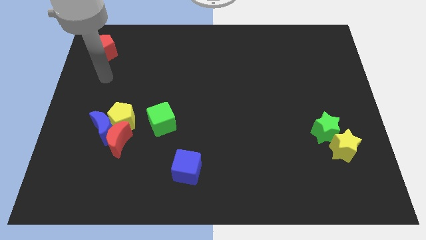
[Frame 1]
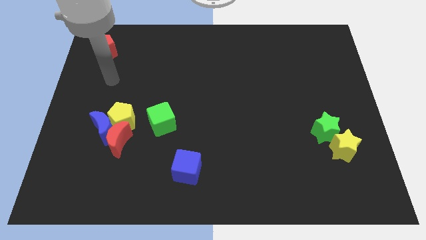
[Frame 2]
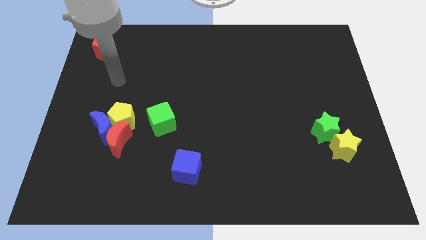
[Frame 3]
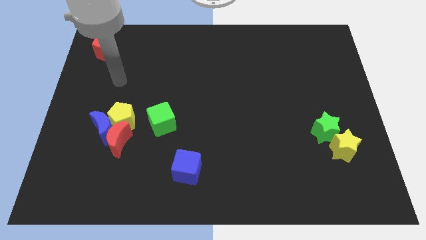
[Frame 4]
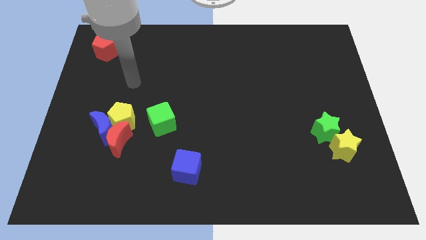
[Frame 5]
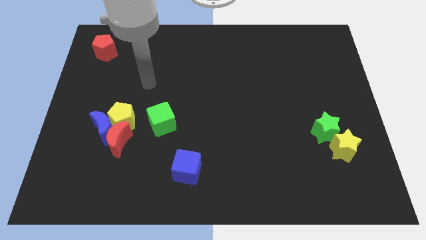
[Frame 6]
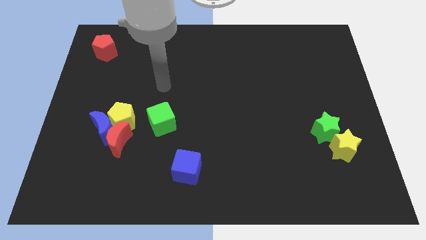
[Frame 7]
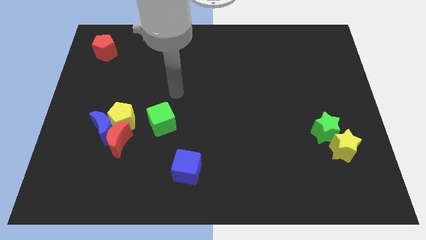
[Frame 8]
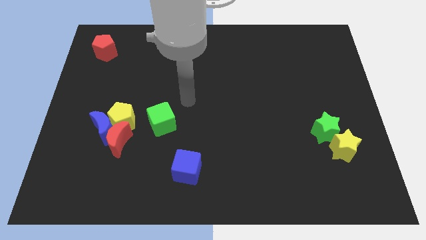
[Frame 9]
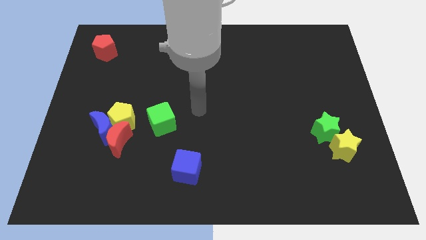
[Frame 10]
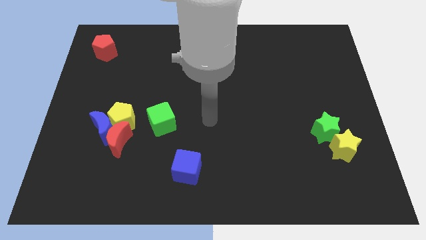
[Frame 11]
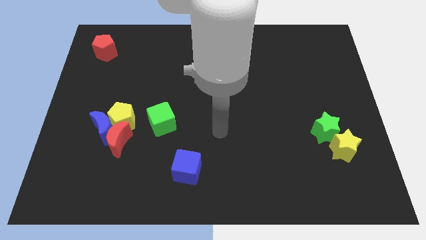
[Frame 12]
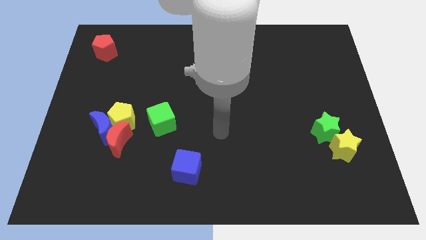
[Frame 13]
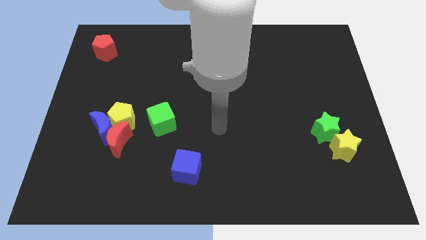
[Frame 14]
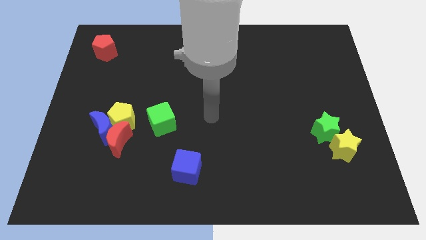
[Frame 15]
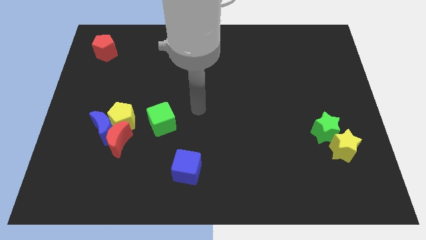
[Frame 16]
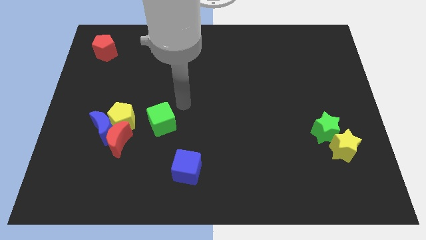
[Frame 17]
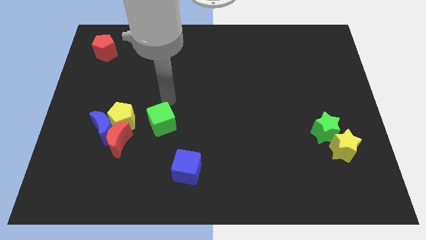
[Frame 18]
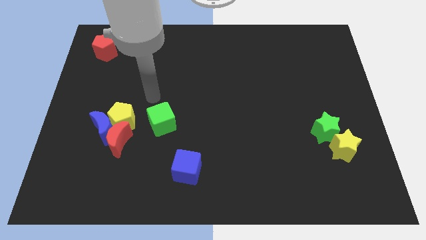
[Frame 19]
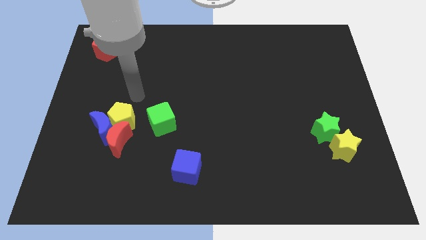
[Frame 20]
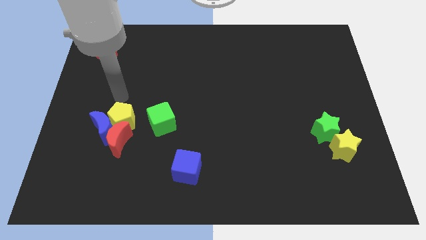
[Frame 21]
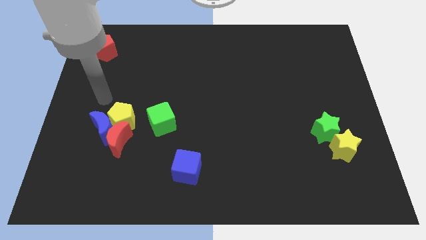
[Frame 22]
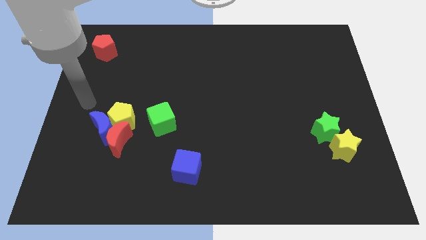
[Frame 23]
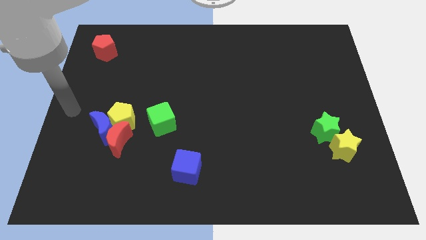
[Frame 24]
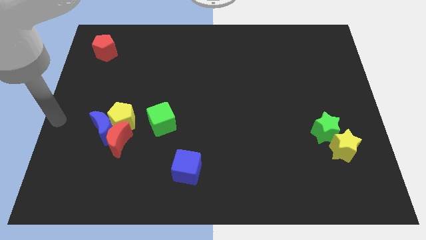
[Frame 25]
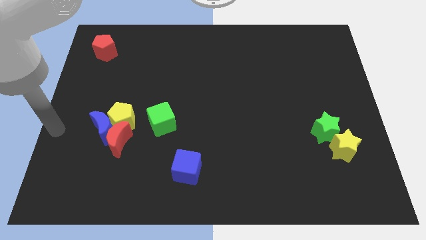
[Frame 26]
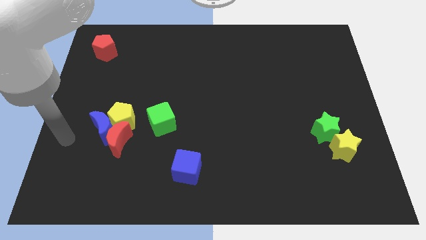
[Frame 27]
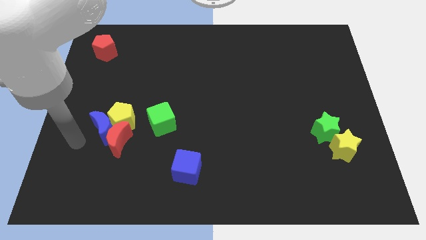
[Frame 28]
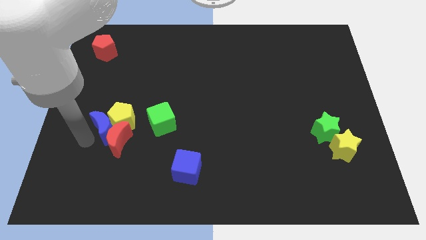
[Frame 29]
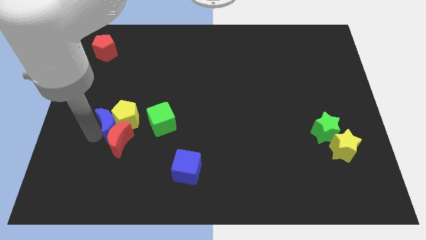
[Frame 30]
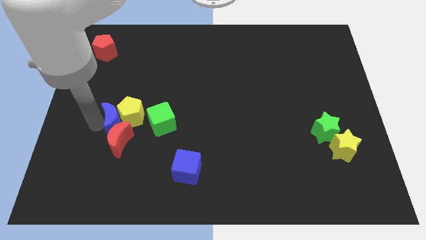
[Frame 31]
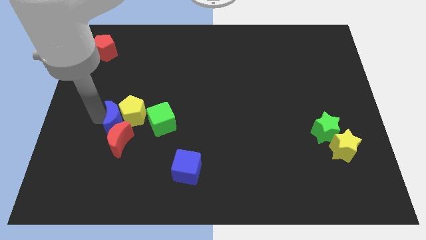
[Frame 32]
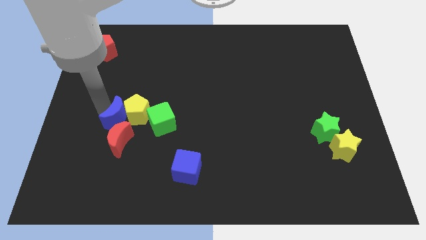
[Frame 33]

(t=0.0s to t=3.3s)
move your arm away from the red pentagon

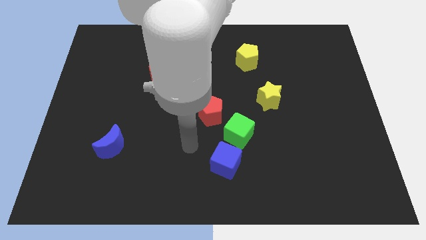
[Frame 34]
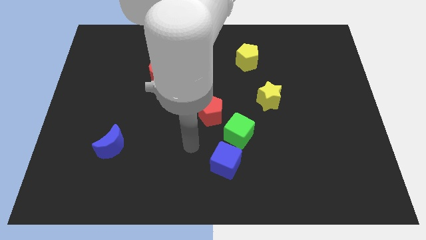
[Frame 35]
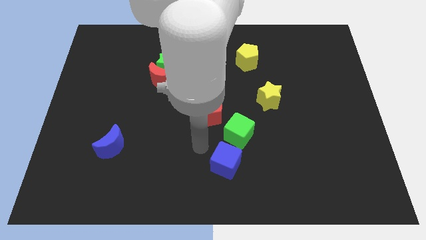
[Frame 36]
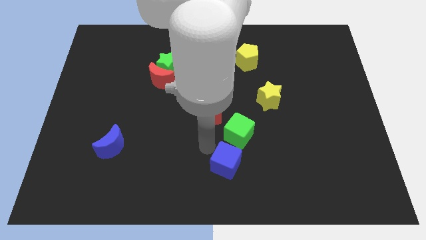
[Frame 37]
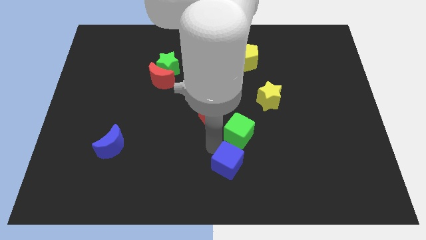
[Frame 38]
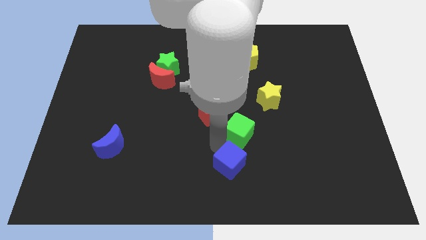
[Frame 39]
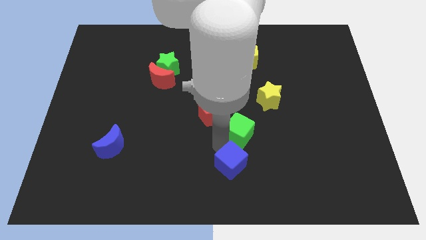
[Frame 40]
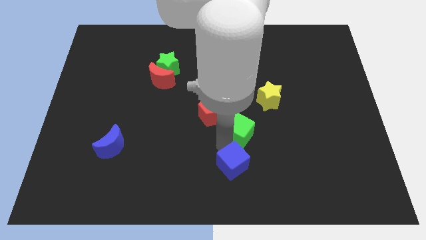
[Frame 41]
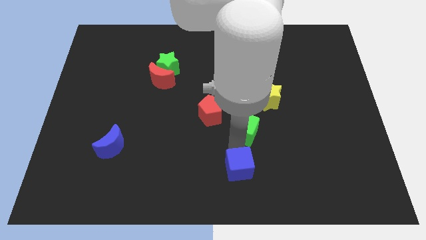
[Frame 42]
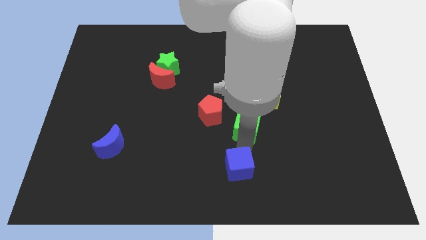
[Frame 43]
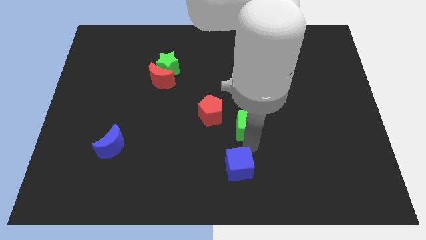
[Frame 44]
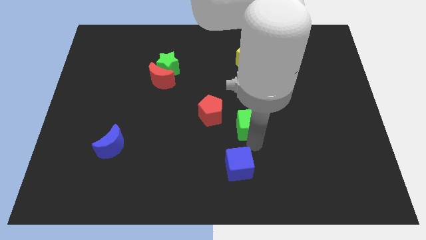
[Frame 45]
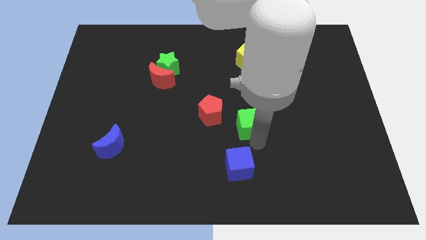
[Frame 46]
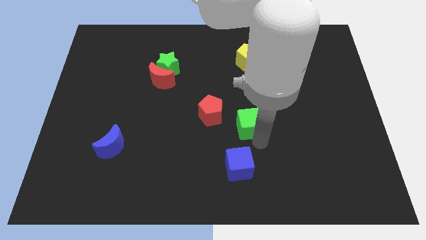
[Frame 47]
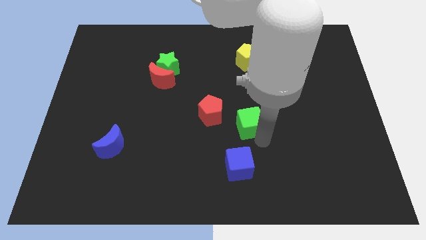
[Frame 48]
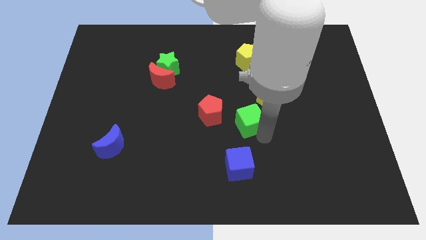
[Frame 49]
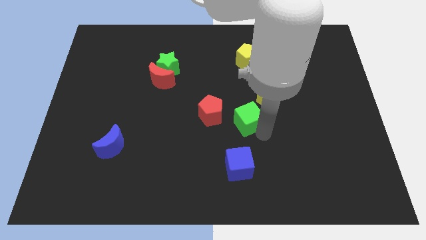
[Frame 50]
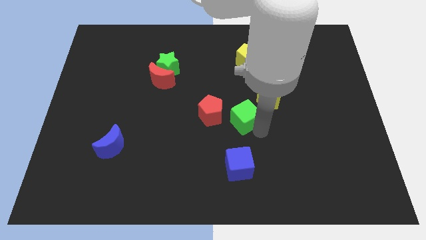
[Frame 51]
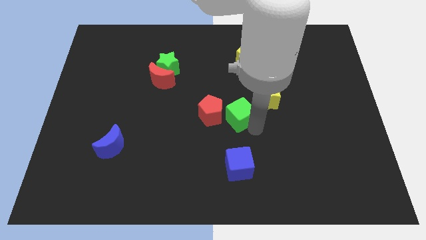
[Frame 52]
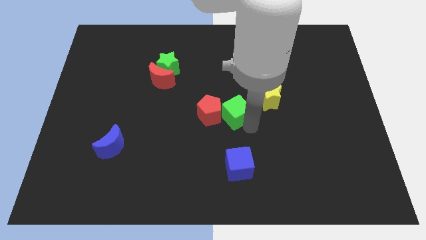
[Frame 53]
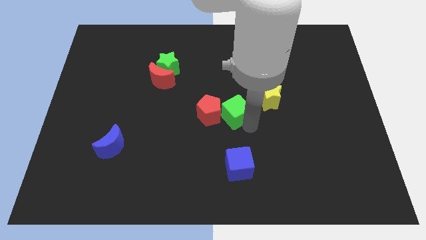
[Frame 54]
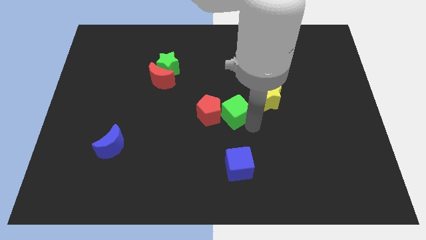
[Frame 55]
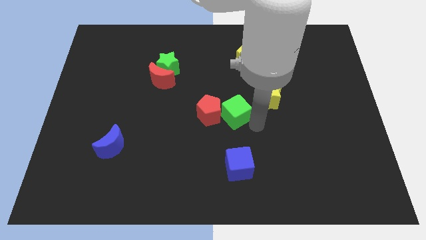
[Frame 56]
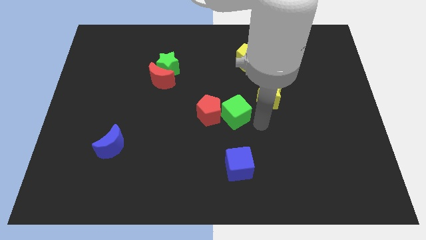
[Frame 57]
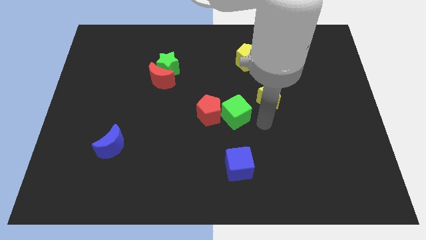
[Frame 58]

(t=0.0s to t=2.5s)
push the green cube to the right side of the red pentagon

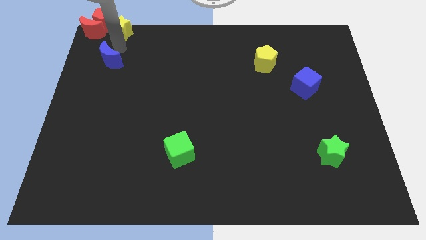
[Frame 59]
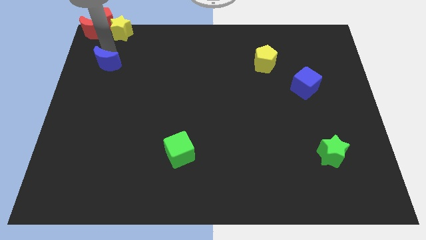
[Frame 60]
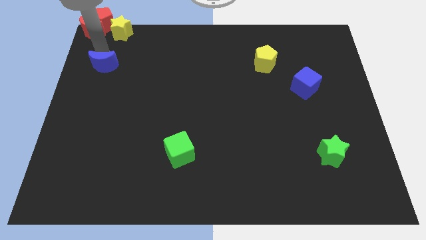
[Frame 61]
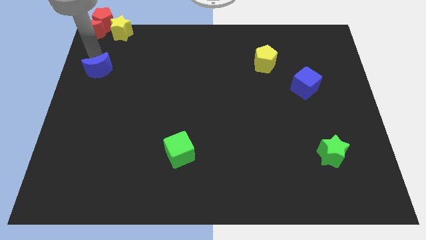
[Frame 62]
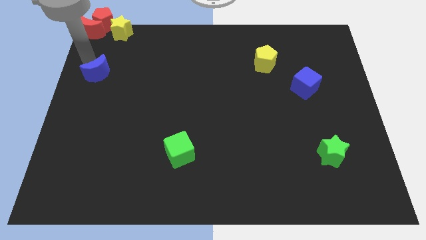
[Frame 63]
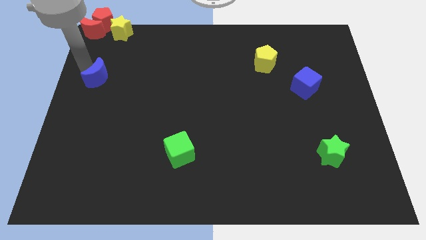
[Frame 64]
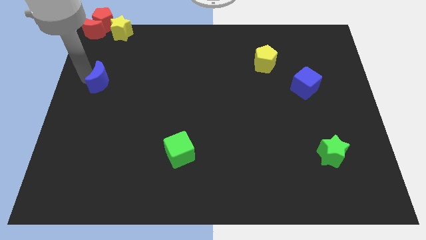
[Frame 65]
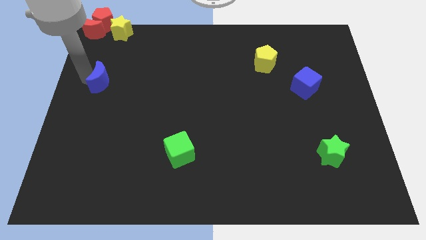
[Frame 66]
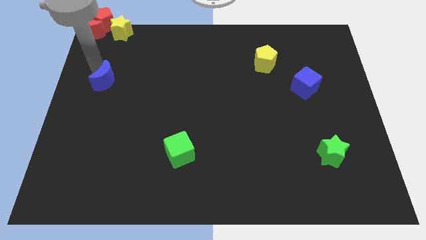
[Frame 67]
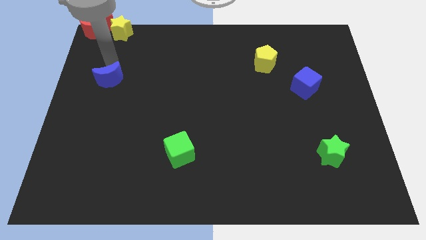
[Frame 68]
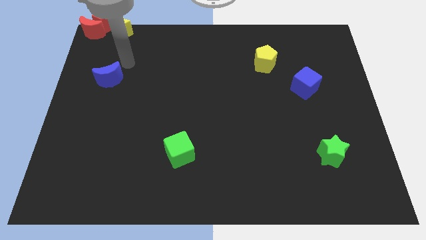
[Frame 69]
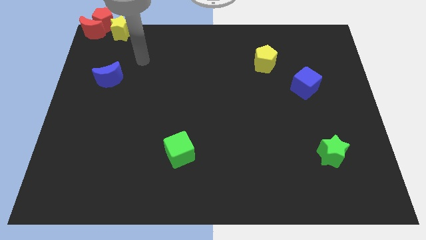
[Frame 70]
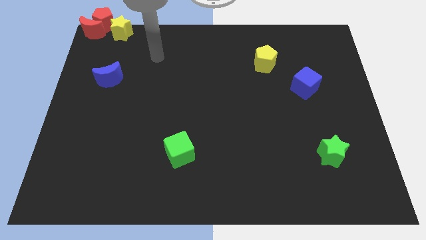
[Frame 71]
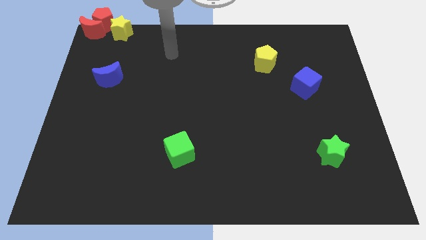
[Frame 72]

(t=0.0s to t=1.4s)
push the blue moon to center left

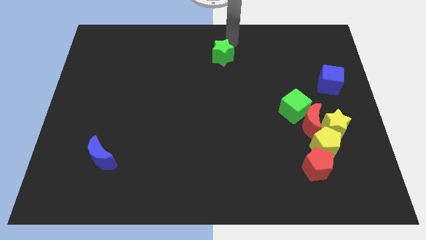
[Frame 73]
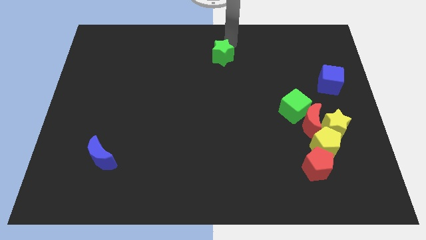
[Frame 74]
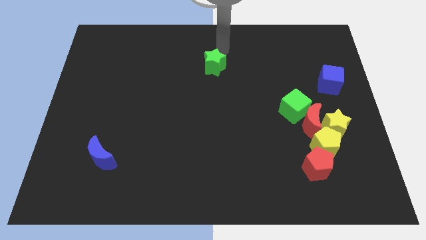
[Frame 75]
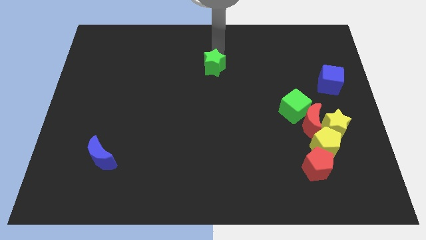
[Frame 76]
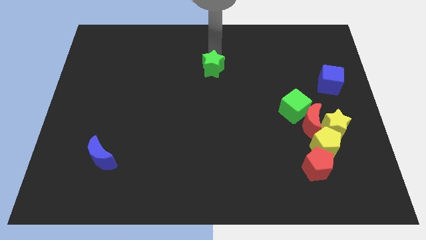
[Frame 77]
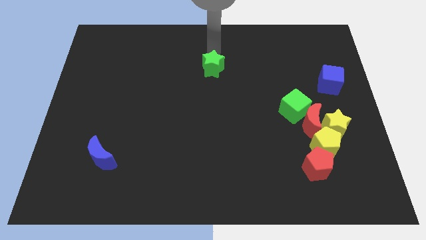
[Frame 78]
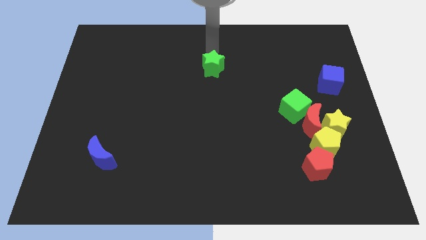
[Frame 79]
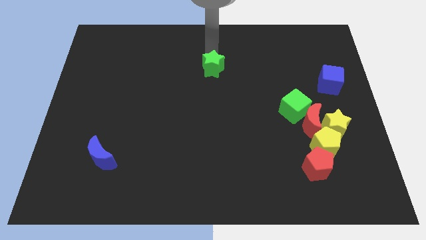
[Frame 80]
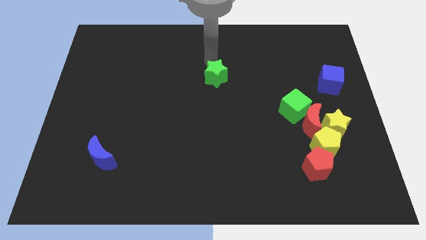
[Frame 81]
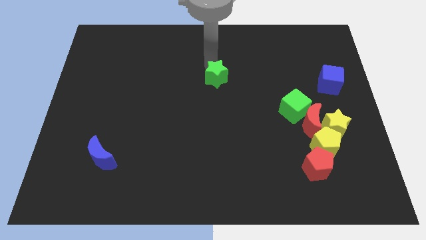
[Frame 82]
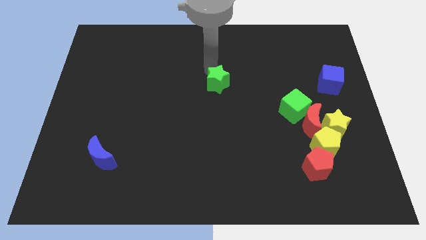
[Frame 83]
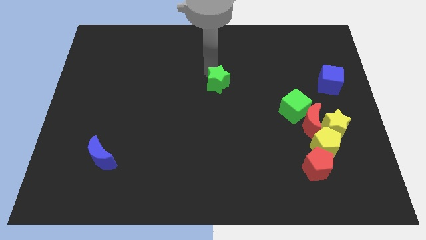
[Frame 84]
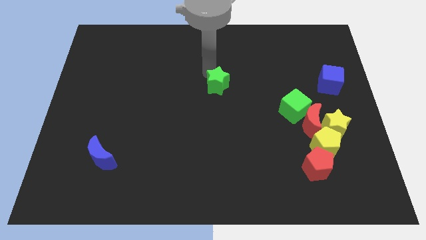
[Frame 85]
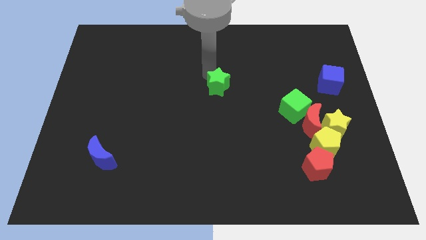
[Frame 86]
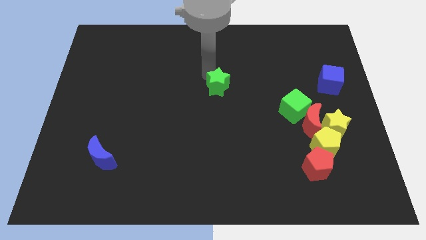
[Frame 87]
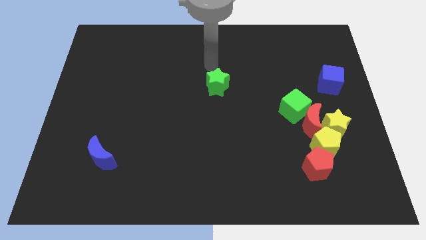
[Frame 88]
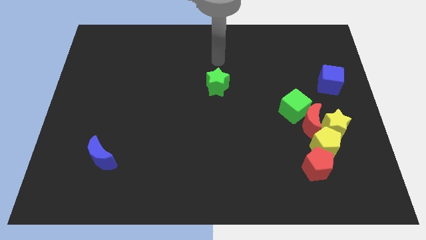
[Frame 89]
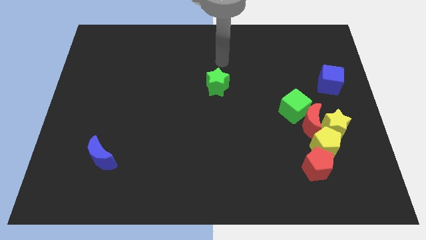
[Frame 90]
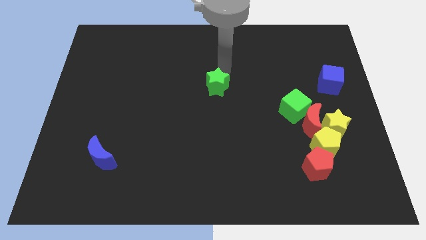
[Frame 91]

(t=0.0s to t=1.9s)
push the green star to the center of the board
